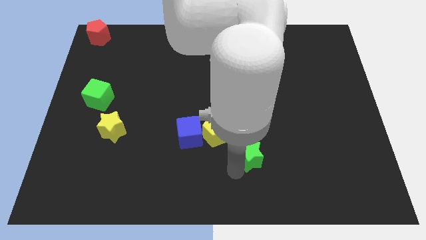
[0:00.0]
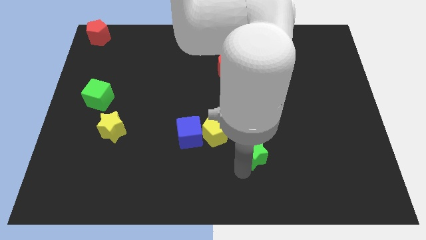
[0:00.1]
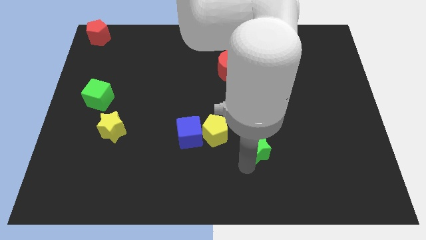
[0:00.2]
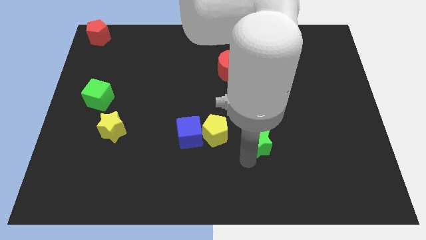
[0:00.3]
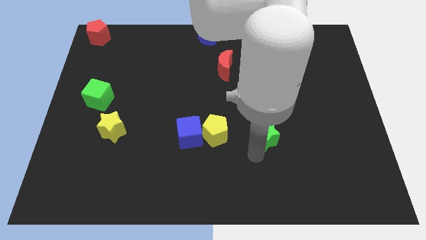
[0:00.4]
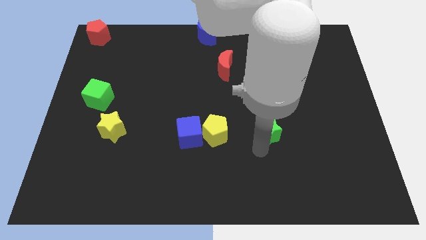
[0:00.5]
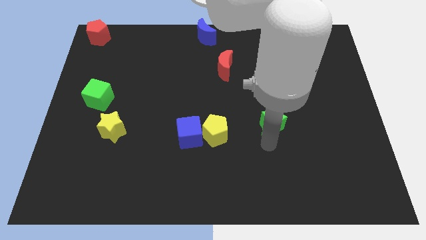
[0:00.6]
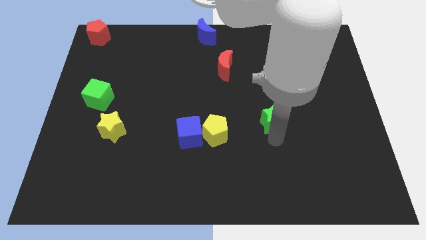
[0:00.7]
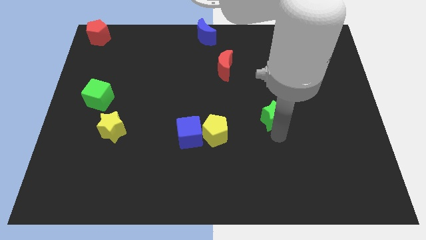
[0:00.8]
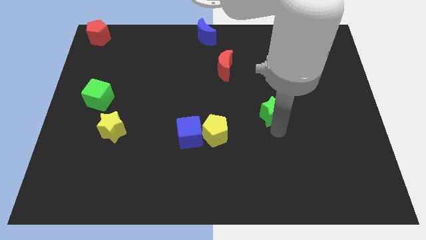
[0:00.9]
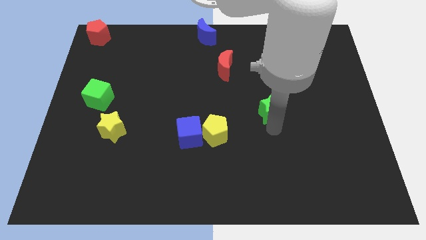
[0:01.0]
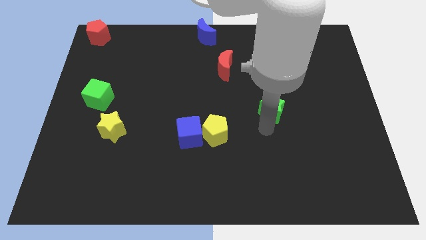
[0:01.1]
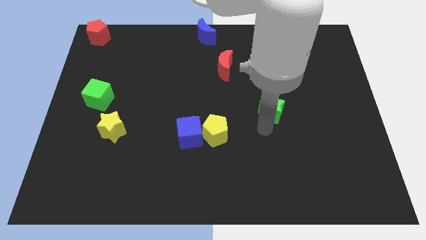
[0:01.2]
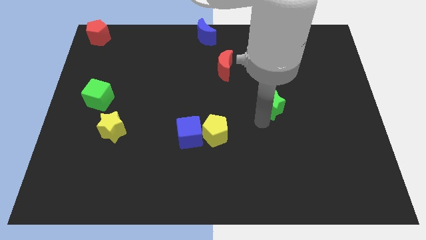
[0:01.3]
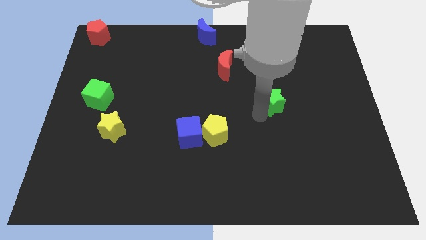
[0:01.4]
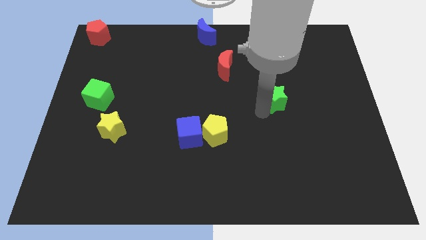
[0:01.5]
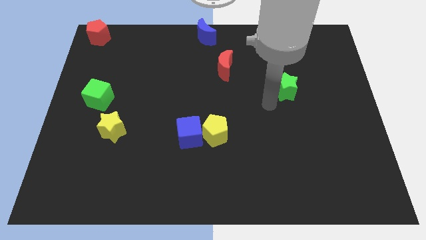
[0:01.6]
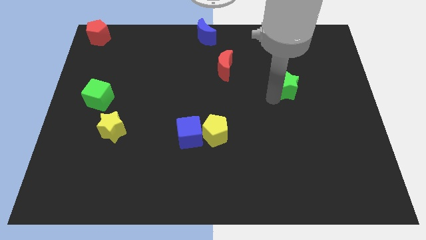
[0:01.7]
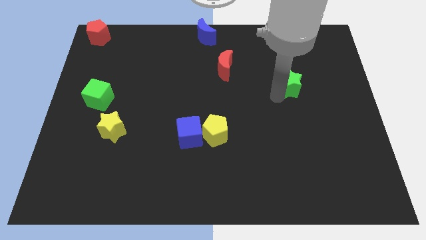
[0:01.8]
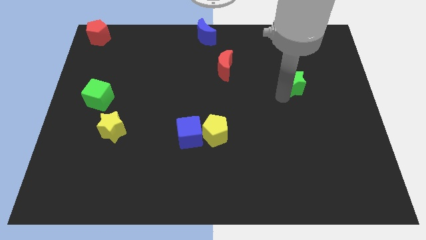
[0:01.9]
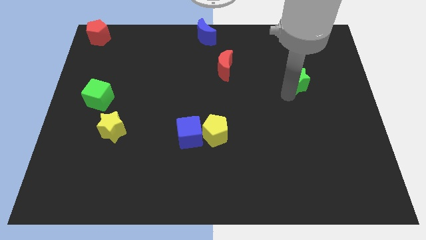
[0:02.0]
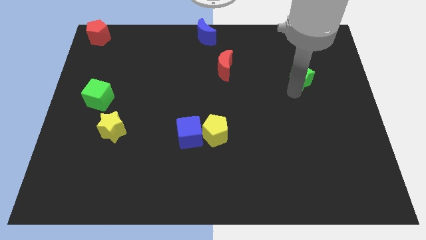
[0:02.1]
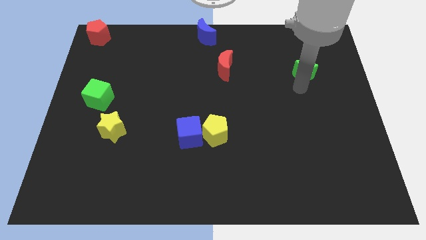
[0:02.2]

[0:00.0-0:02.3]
move green star to the top right

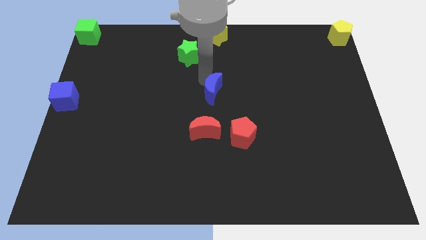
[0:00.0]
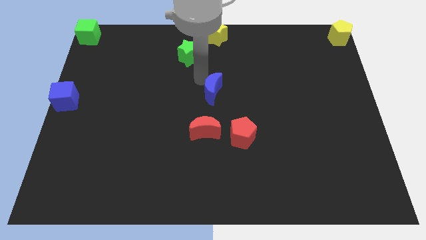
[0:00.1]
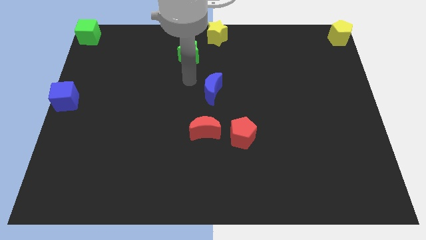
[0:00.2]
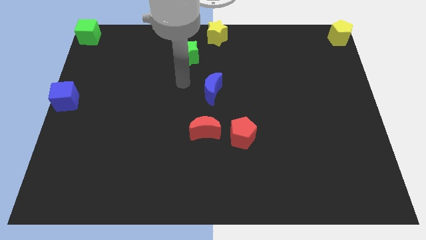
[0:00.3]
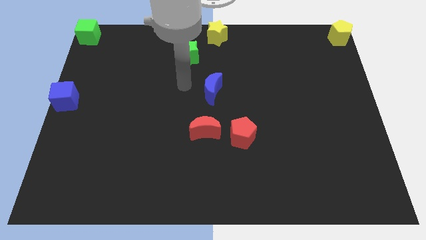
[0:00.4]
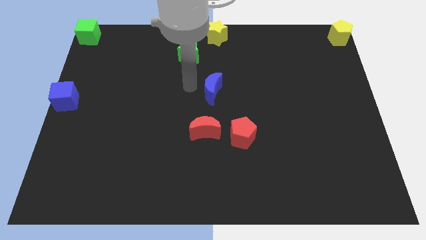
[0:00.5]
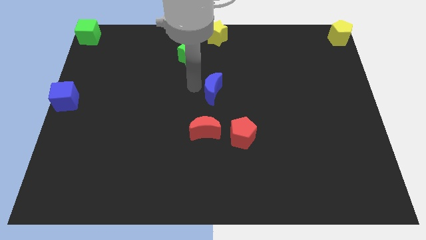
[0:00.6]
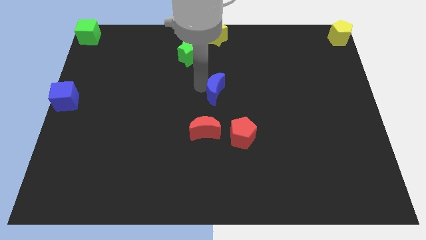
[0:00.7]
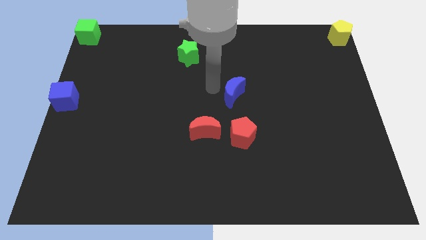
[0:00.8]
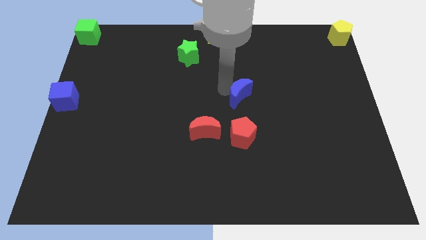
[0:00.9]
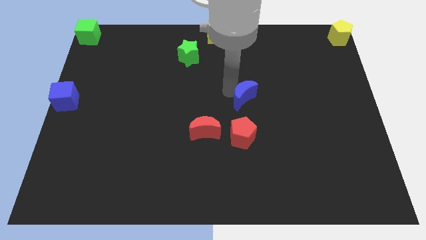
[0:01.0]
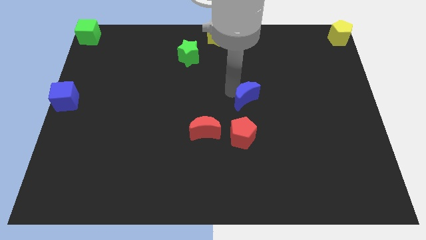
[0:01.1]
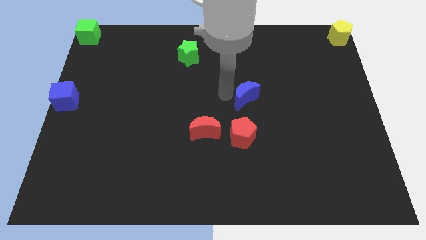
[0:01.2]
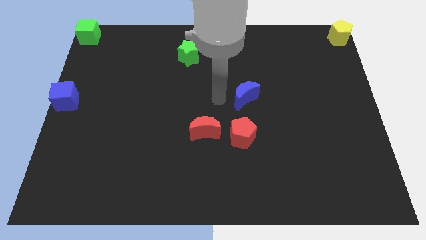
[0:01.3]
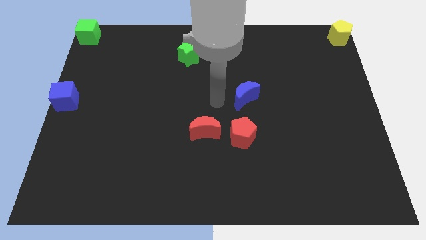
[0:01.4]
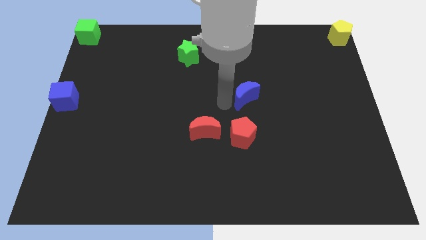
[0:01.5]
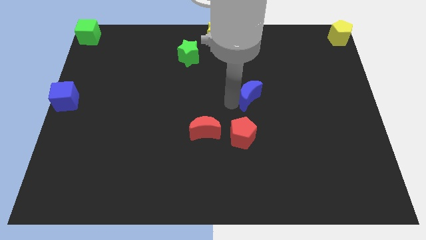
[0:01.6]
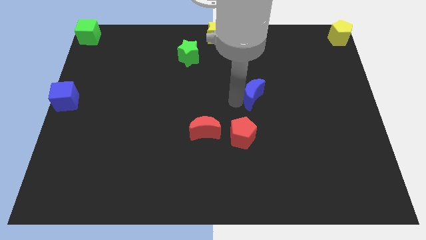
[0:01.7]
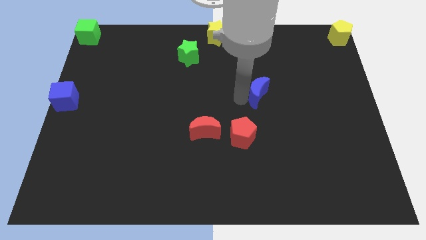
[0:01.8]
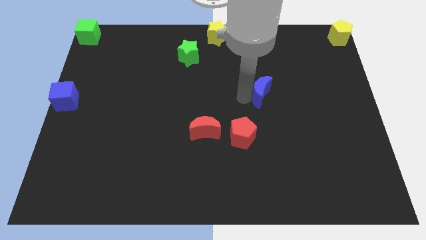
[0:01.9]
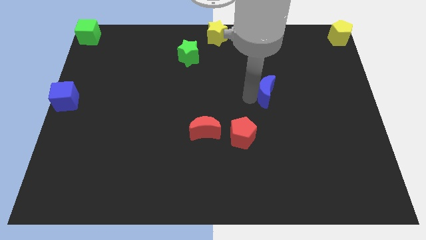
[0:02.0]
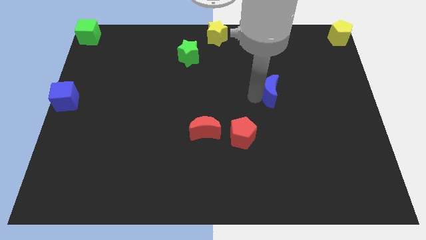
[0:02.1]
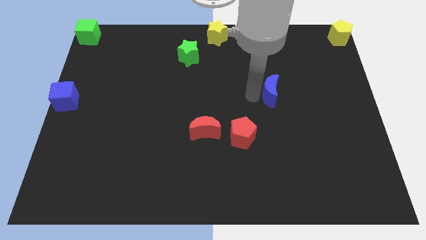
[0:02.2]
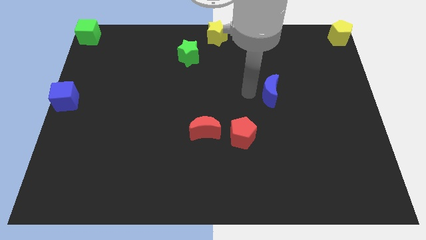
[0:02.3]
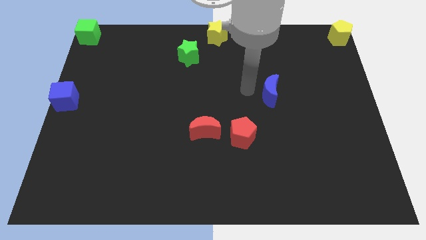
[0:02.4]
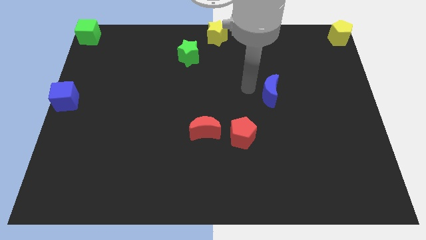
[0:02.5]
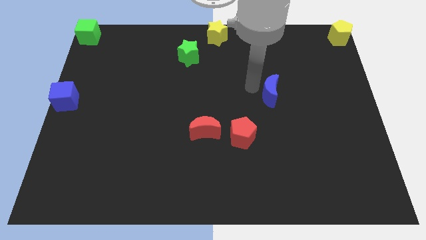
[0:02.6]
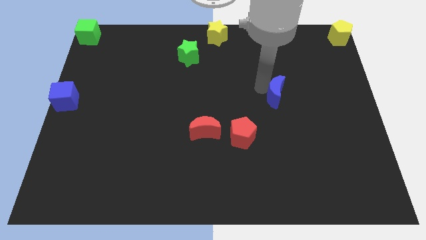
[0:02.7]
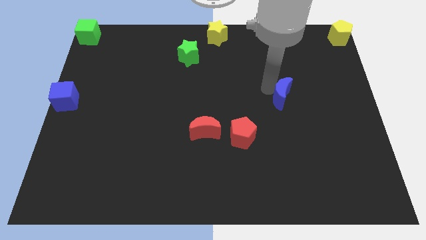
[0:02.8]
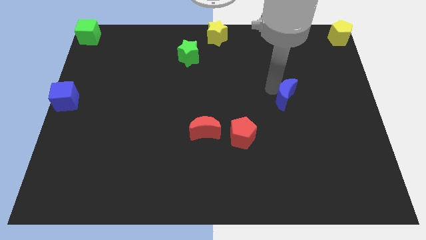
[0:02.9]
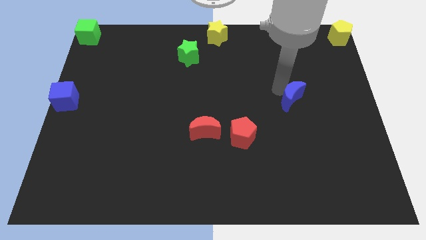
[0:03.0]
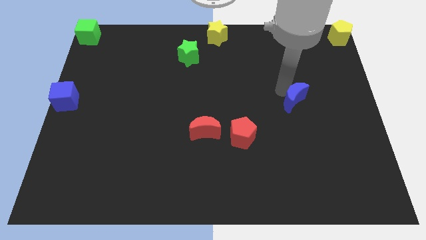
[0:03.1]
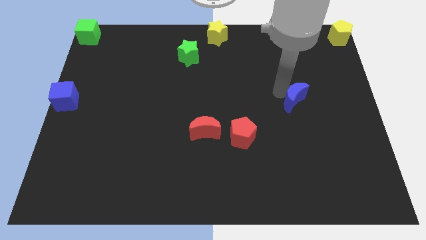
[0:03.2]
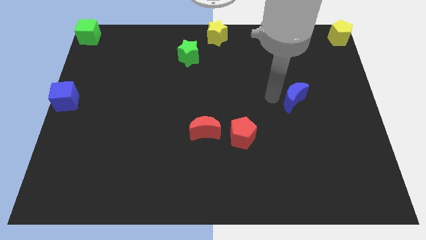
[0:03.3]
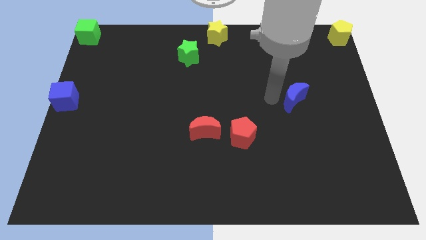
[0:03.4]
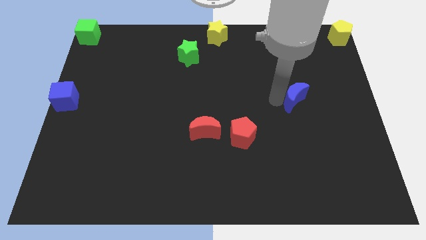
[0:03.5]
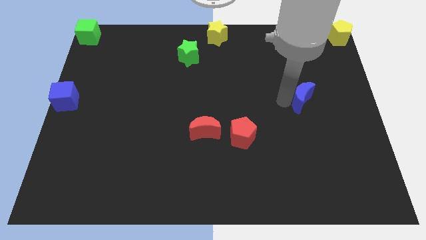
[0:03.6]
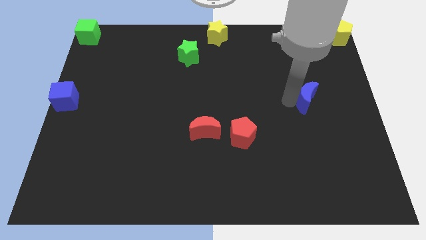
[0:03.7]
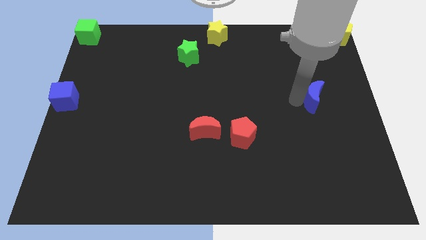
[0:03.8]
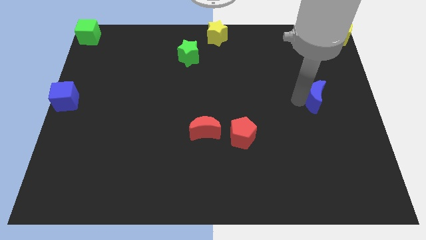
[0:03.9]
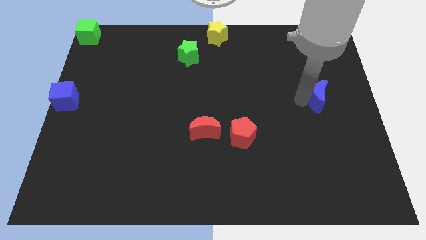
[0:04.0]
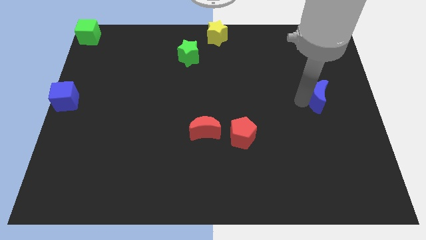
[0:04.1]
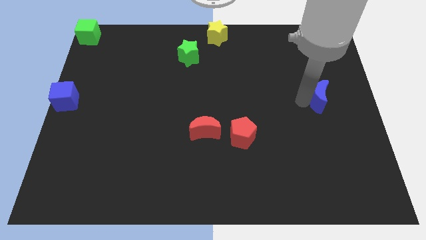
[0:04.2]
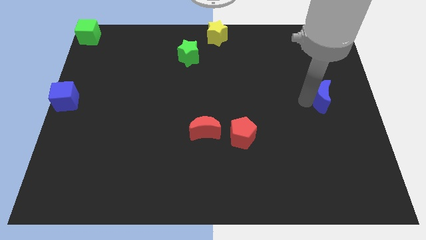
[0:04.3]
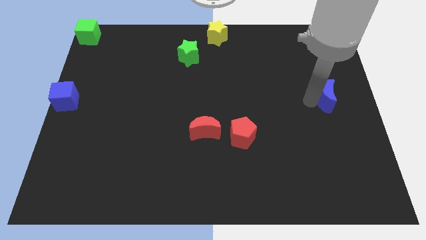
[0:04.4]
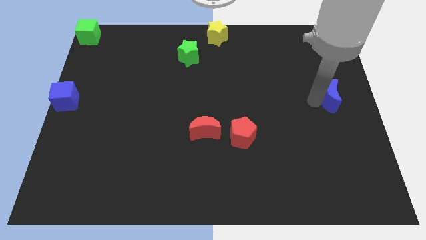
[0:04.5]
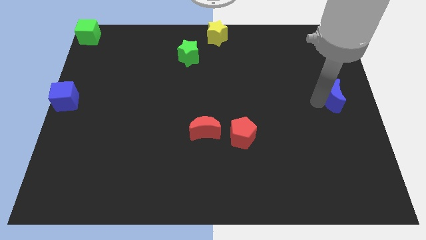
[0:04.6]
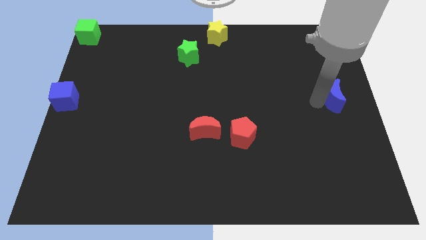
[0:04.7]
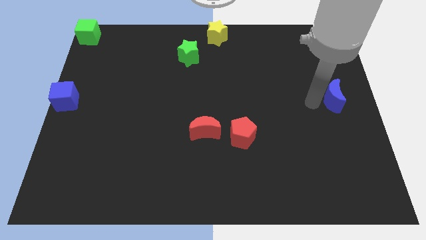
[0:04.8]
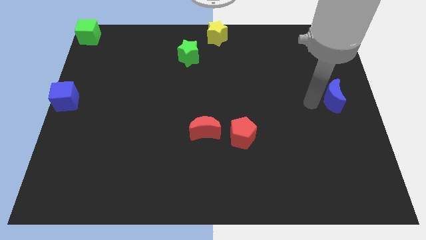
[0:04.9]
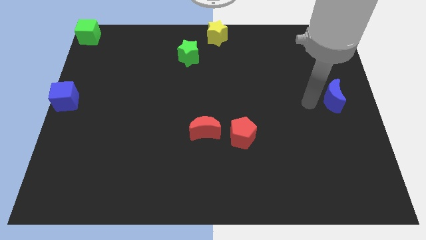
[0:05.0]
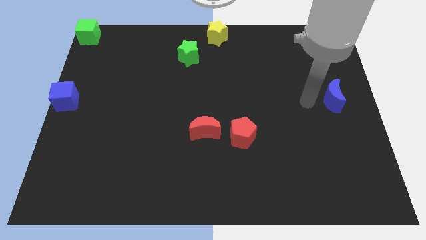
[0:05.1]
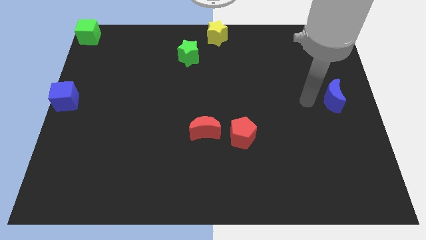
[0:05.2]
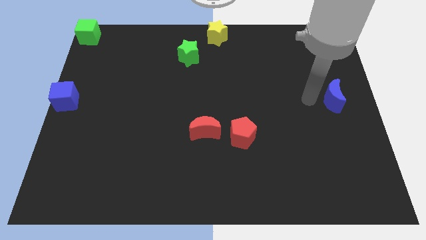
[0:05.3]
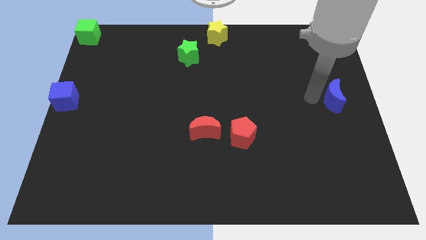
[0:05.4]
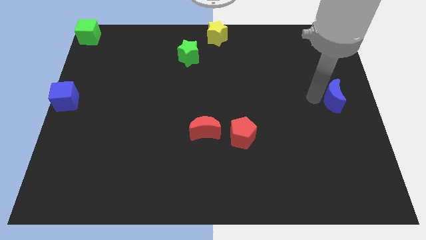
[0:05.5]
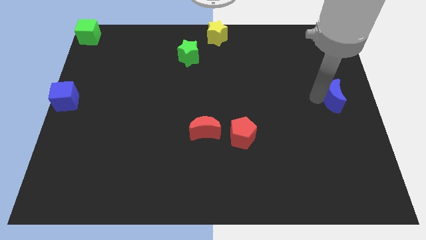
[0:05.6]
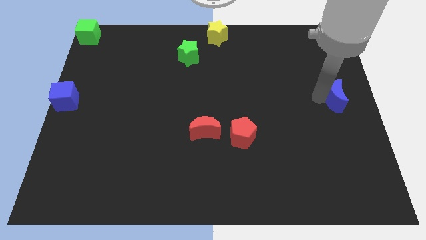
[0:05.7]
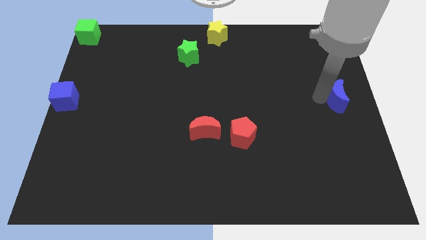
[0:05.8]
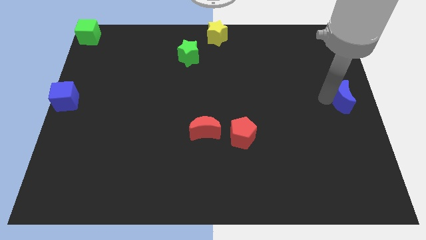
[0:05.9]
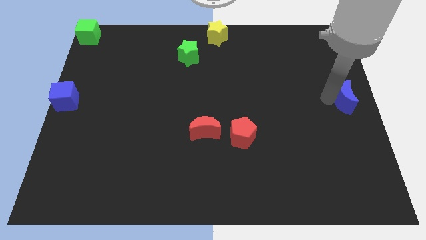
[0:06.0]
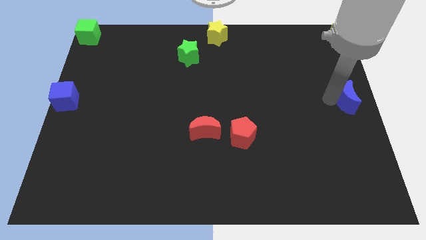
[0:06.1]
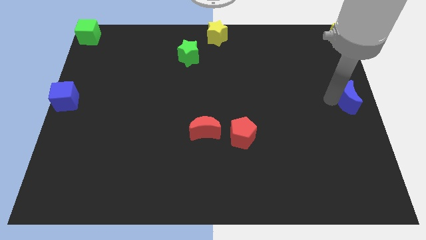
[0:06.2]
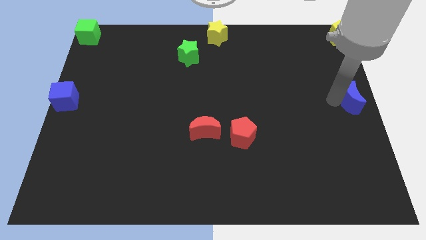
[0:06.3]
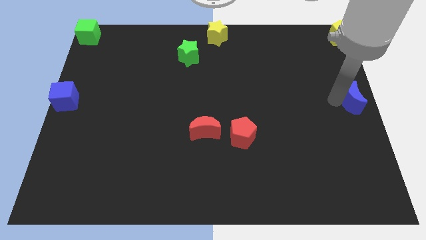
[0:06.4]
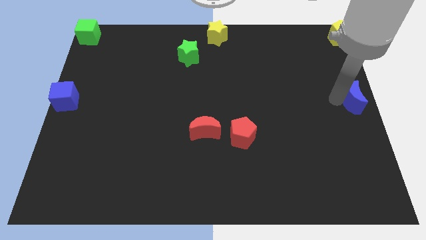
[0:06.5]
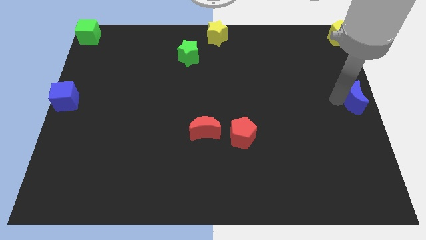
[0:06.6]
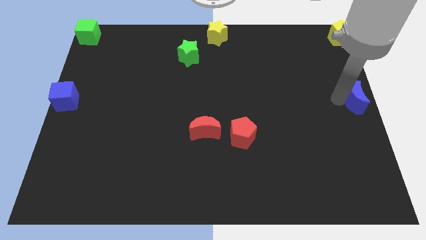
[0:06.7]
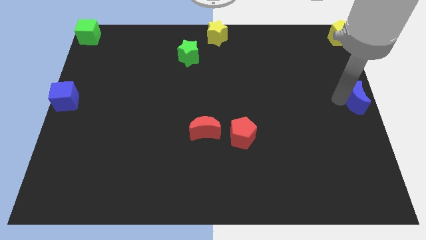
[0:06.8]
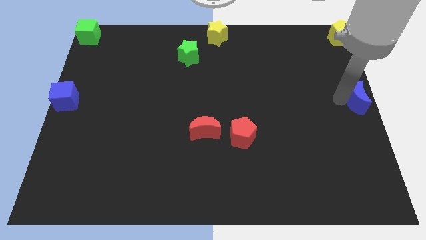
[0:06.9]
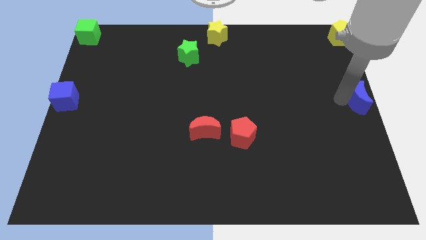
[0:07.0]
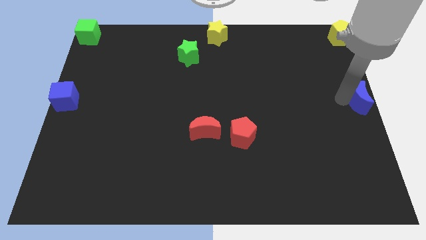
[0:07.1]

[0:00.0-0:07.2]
drag blue moon towards middle right side of the board
